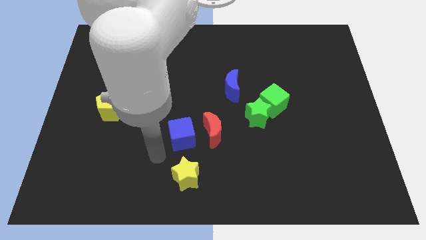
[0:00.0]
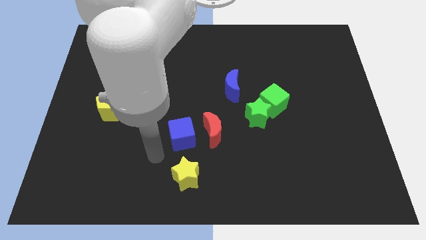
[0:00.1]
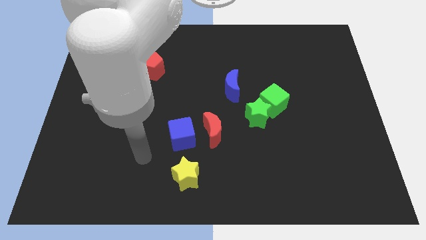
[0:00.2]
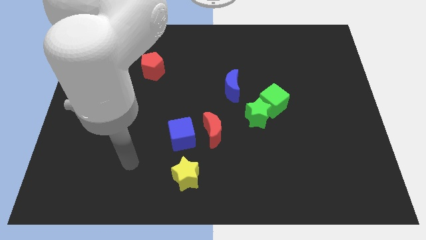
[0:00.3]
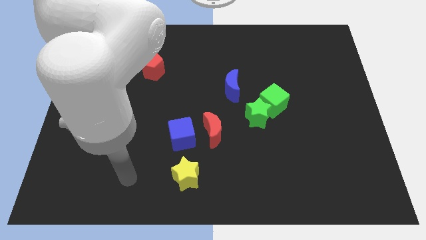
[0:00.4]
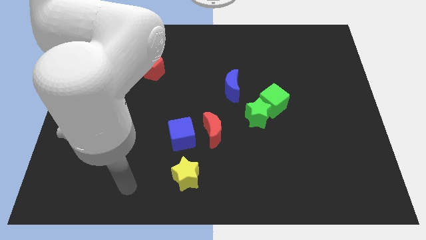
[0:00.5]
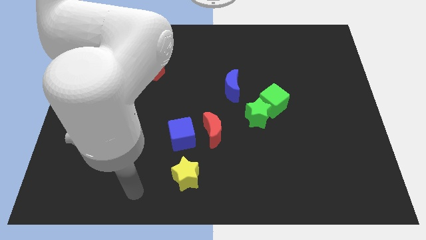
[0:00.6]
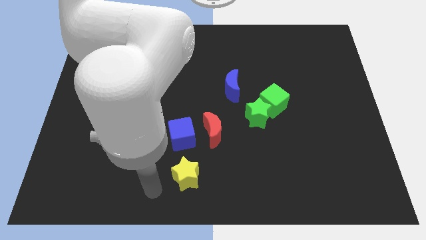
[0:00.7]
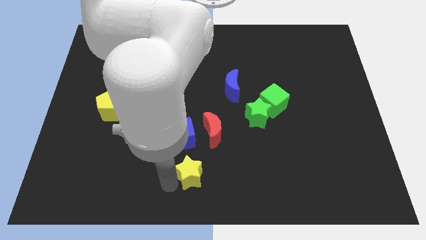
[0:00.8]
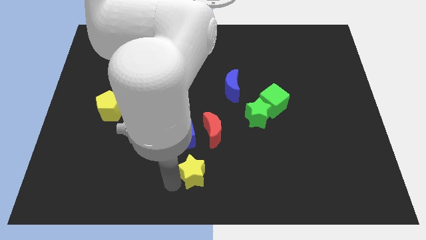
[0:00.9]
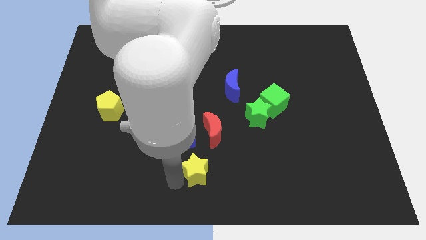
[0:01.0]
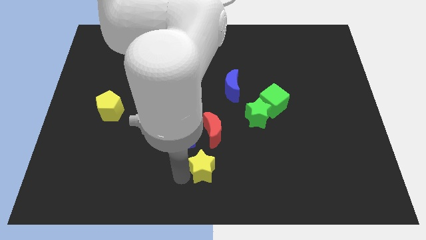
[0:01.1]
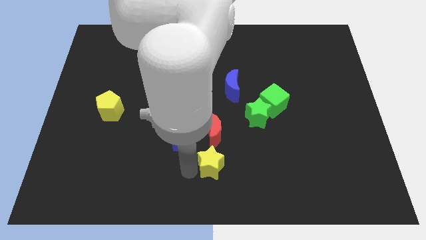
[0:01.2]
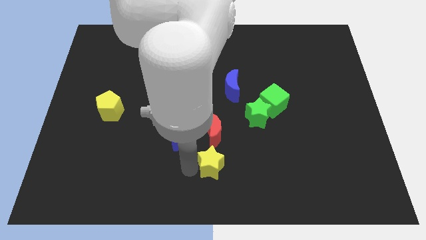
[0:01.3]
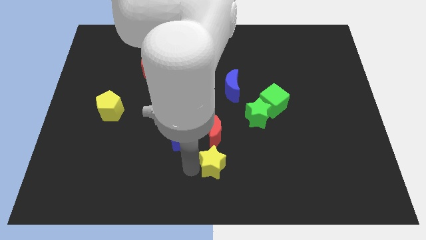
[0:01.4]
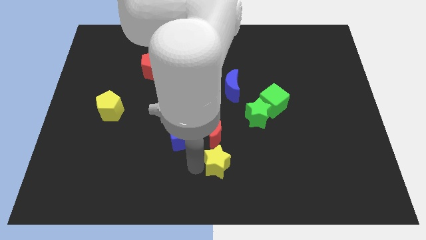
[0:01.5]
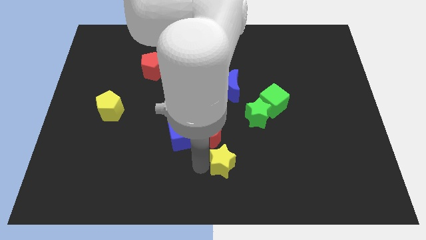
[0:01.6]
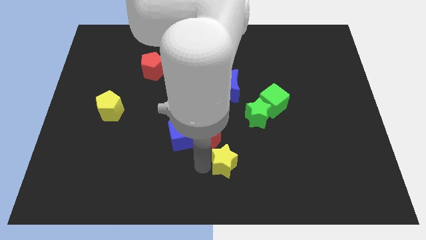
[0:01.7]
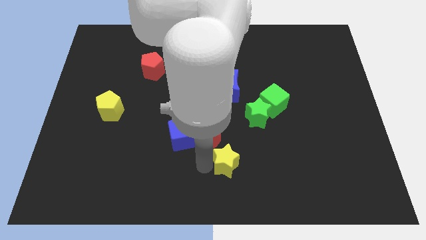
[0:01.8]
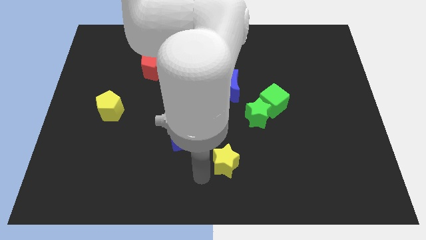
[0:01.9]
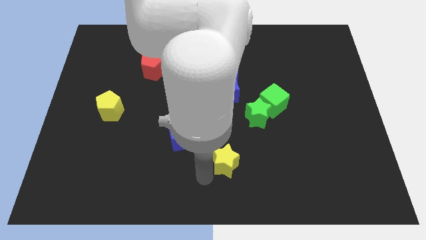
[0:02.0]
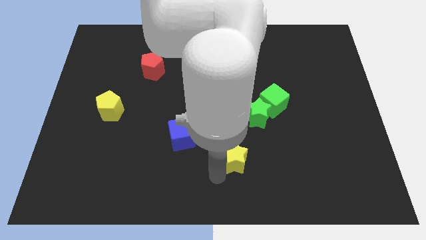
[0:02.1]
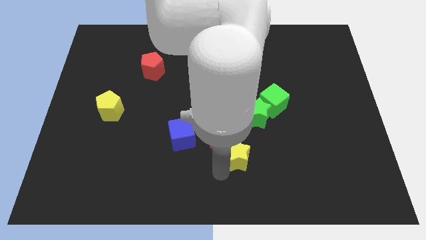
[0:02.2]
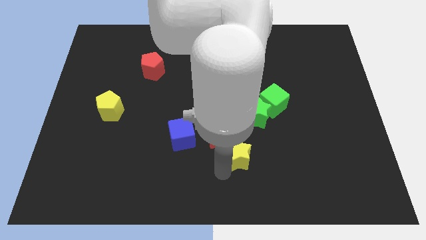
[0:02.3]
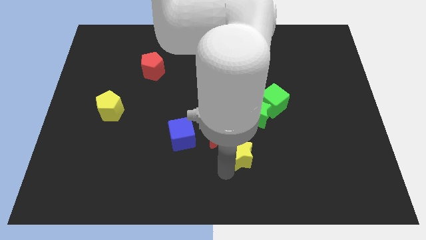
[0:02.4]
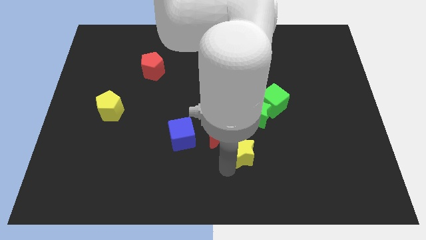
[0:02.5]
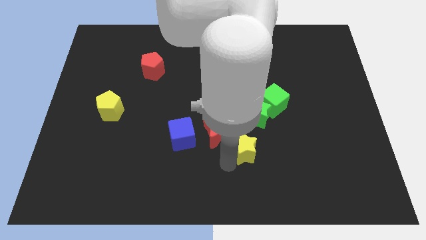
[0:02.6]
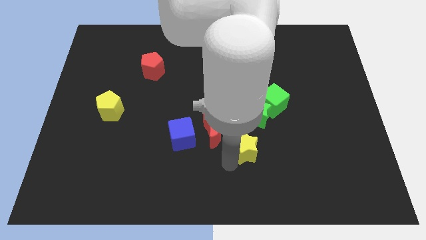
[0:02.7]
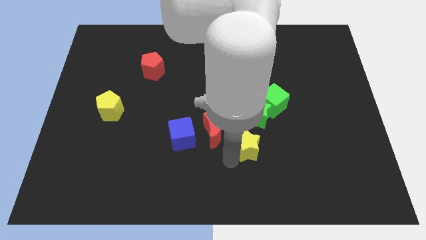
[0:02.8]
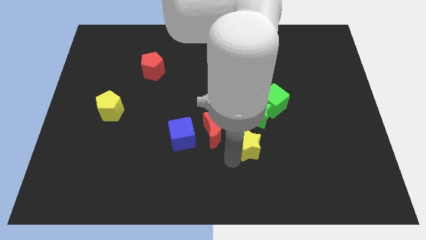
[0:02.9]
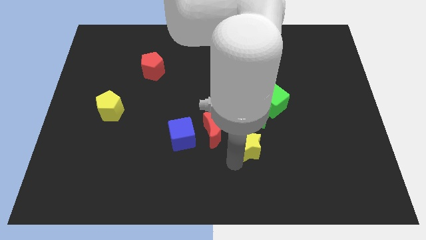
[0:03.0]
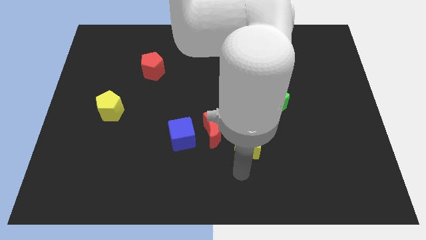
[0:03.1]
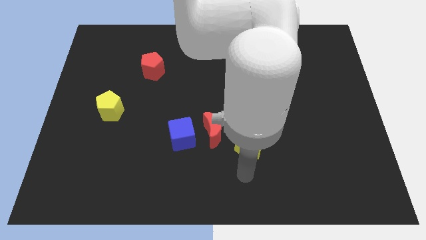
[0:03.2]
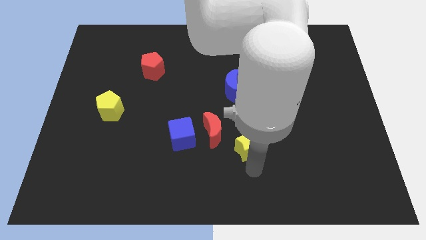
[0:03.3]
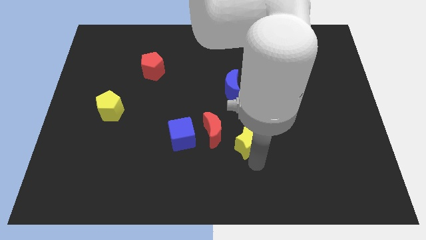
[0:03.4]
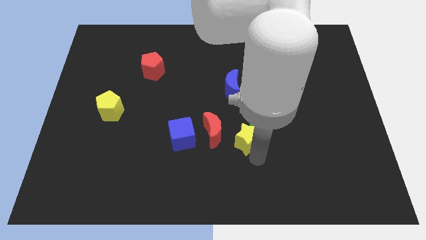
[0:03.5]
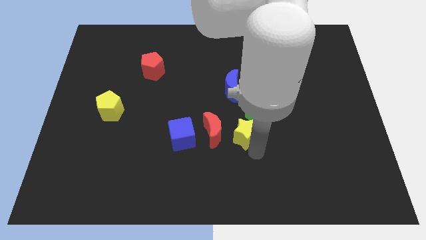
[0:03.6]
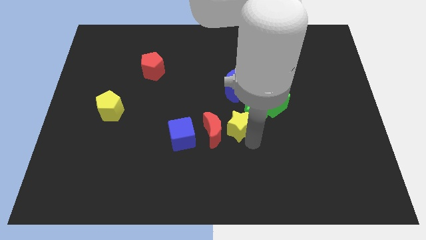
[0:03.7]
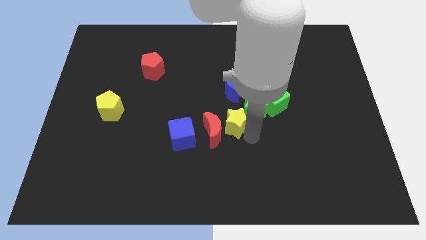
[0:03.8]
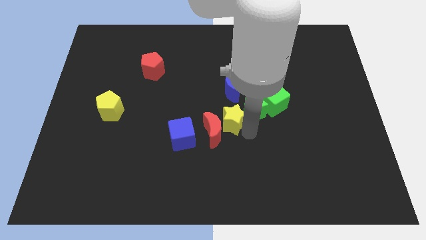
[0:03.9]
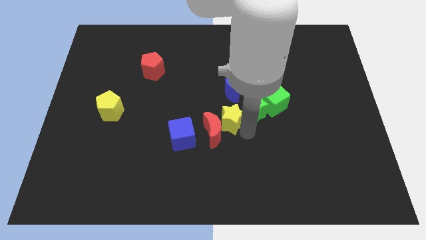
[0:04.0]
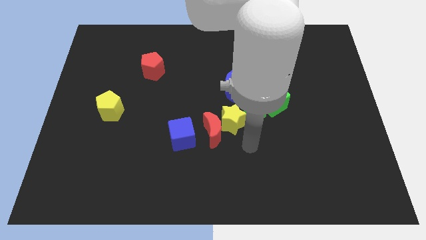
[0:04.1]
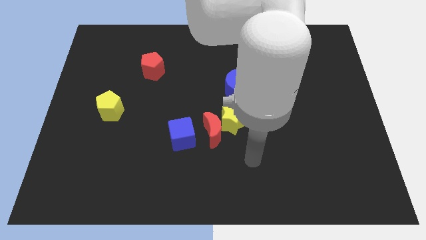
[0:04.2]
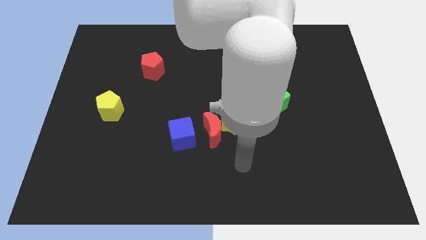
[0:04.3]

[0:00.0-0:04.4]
put the yellow star in between the red crescent and green star

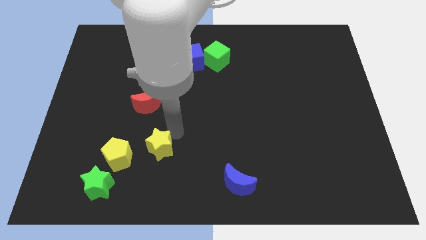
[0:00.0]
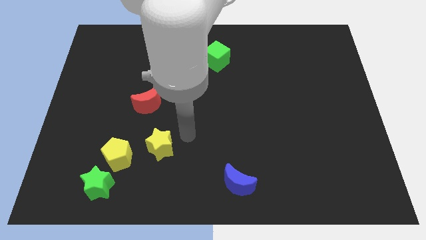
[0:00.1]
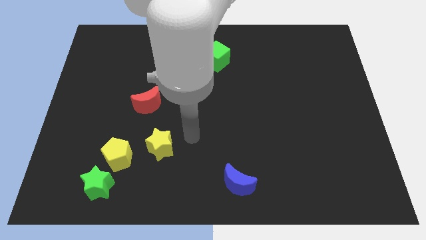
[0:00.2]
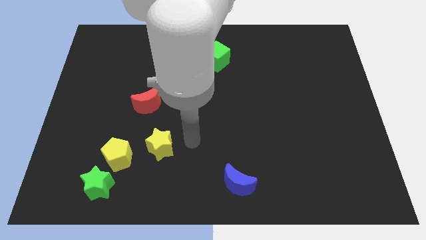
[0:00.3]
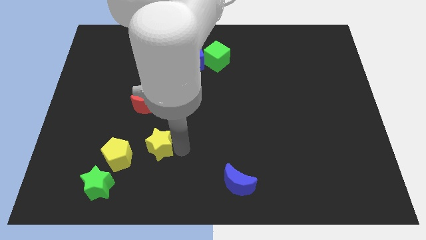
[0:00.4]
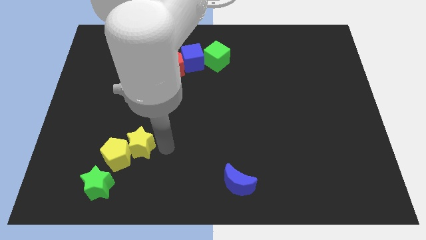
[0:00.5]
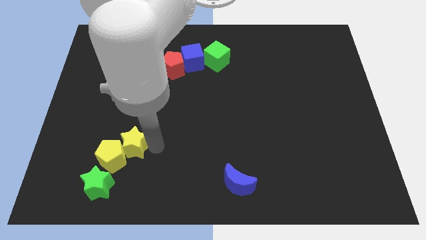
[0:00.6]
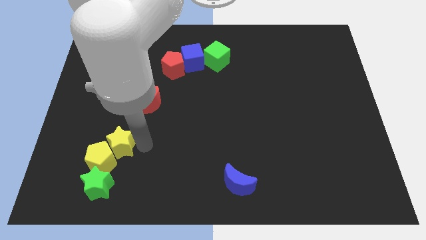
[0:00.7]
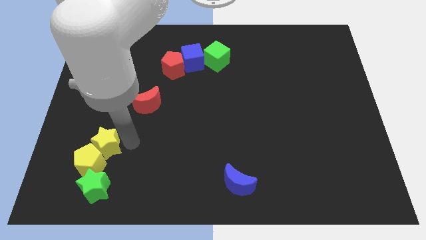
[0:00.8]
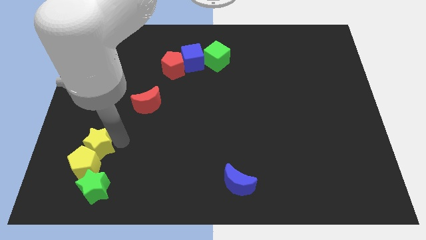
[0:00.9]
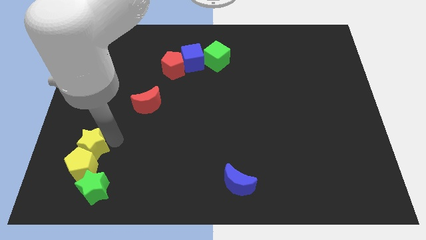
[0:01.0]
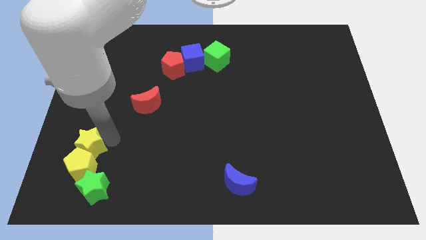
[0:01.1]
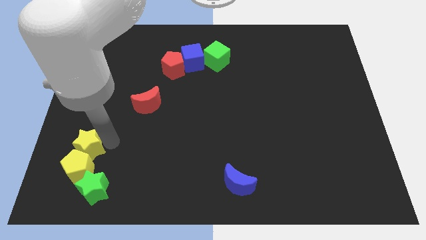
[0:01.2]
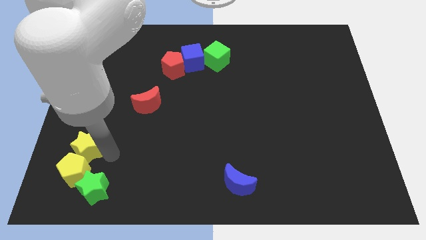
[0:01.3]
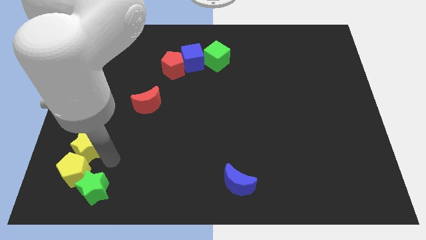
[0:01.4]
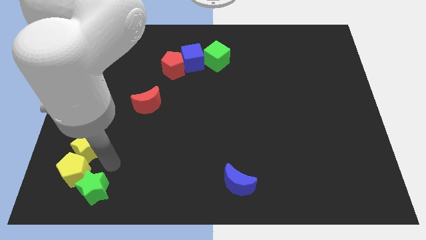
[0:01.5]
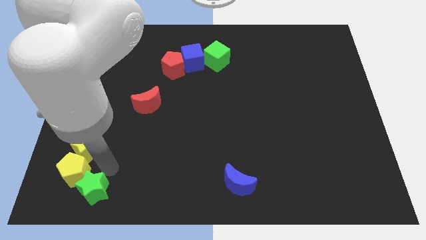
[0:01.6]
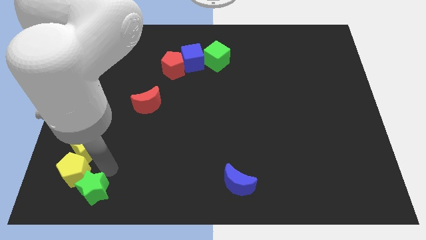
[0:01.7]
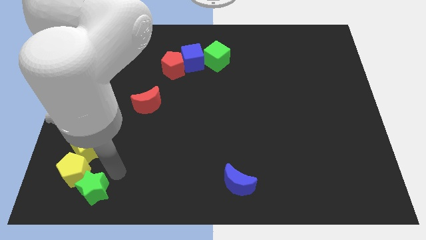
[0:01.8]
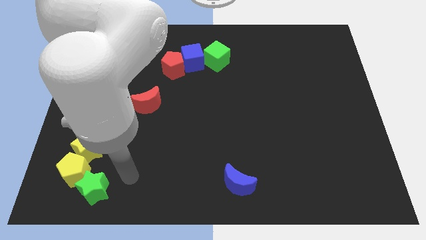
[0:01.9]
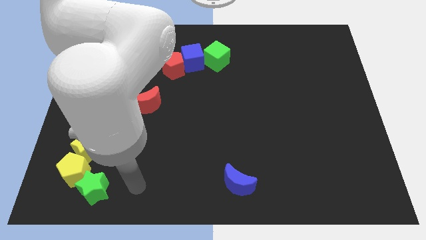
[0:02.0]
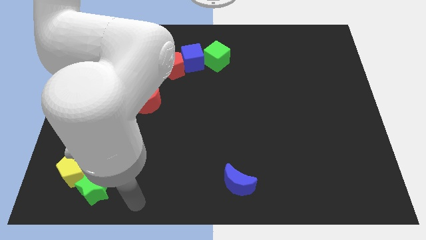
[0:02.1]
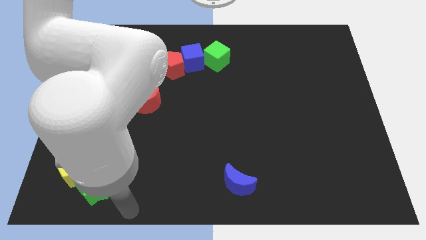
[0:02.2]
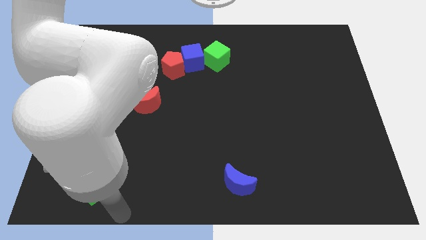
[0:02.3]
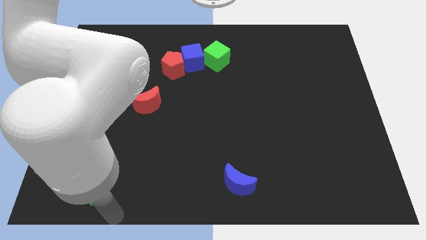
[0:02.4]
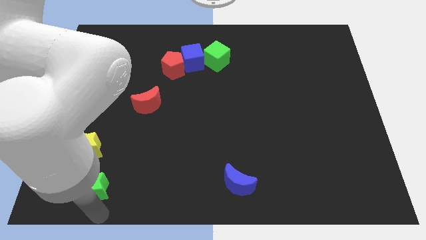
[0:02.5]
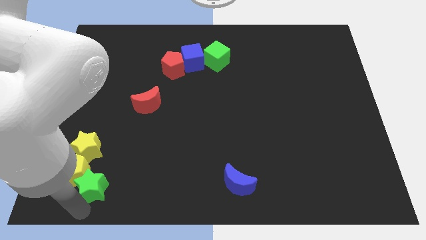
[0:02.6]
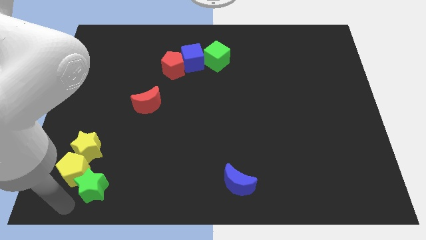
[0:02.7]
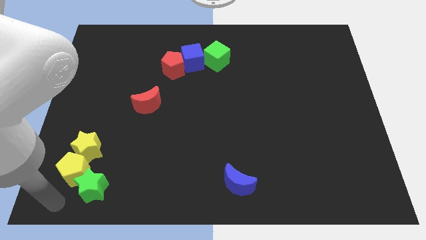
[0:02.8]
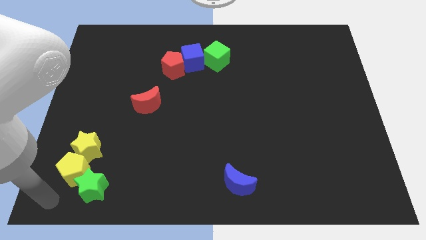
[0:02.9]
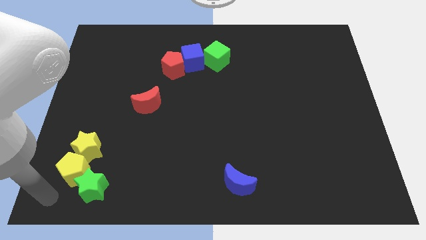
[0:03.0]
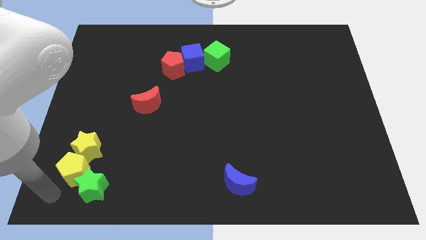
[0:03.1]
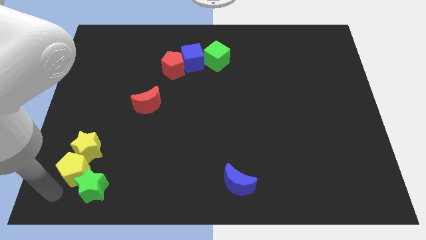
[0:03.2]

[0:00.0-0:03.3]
push the green star and yellow blocks towards the bottom left corner of the board

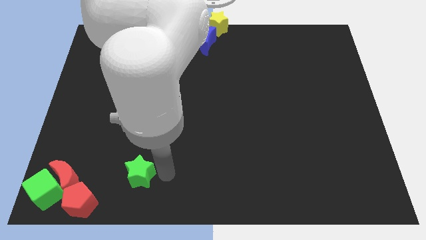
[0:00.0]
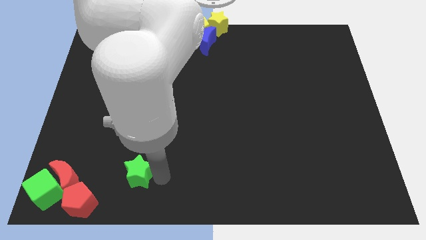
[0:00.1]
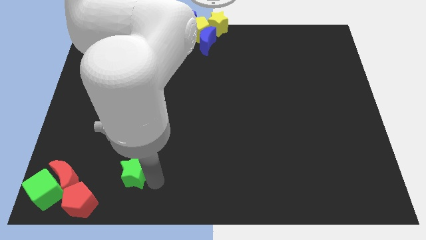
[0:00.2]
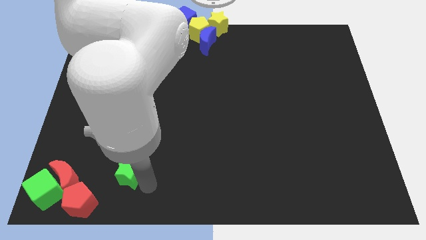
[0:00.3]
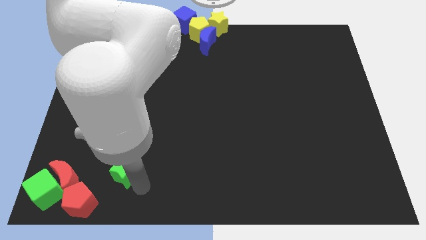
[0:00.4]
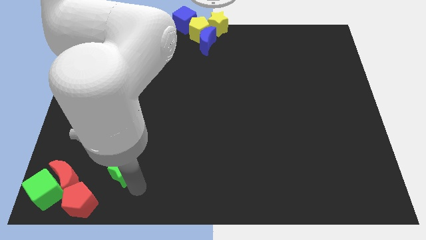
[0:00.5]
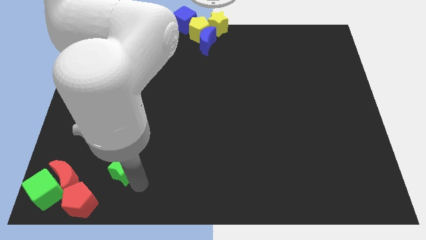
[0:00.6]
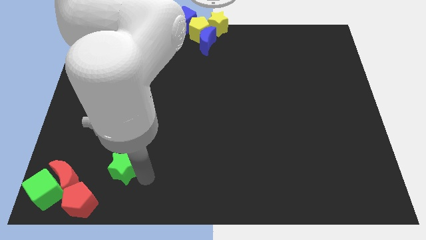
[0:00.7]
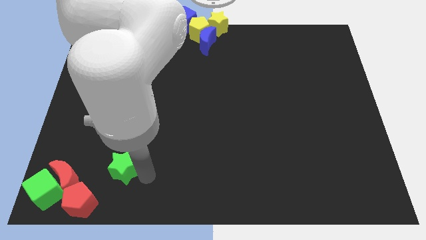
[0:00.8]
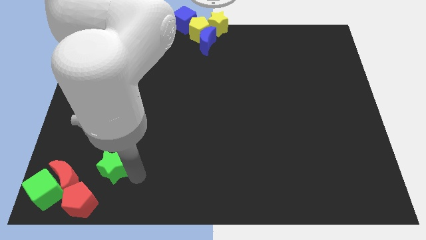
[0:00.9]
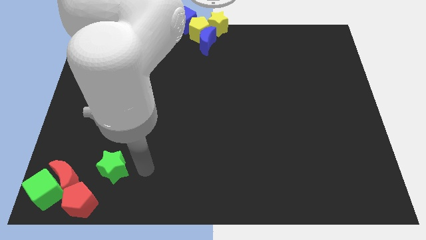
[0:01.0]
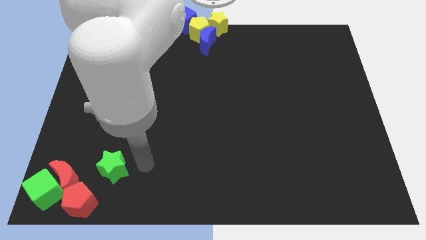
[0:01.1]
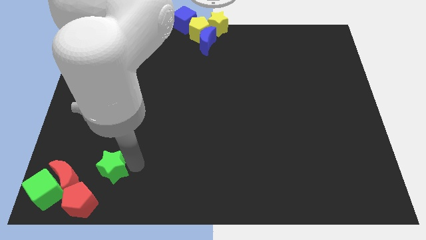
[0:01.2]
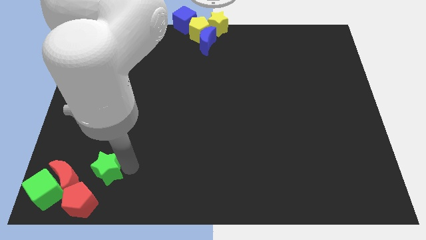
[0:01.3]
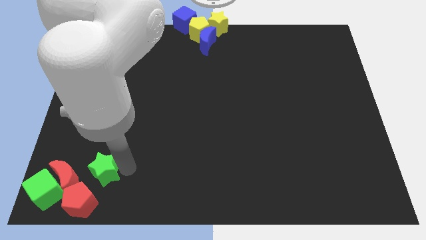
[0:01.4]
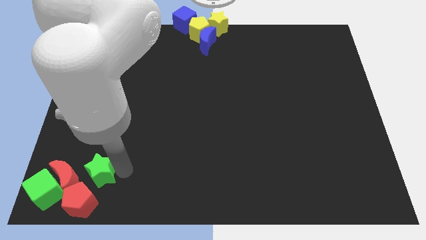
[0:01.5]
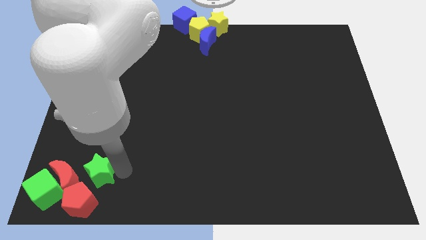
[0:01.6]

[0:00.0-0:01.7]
move the green star to the bottom left corner
